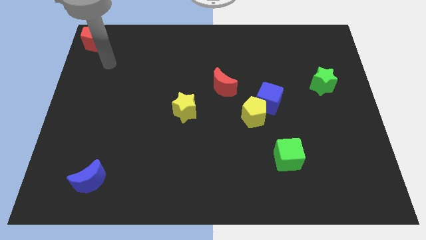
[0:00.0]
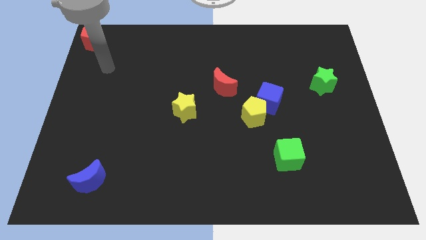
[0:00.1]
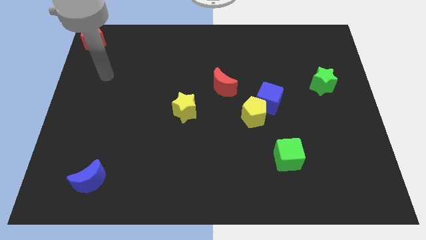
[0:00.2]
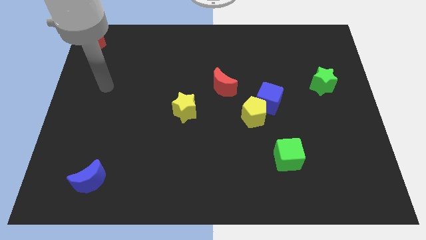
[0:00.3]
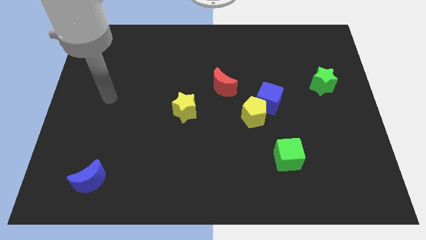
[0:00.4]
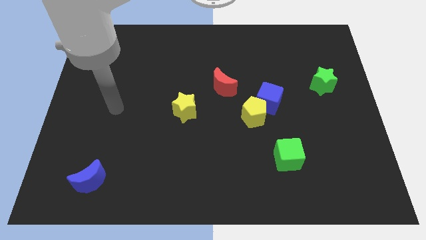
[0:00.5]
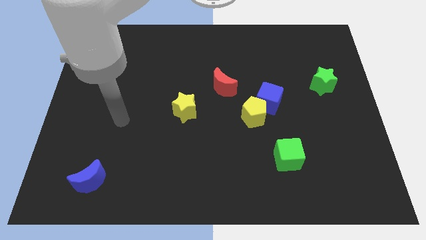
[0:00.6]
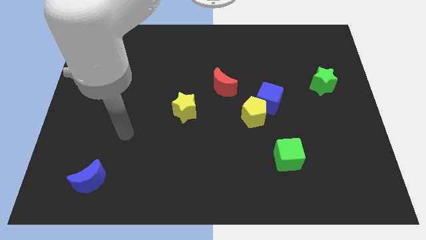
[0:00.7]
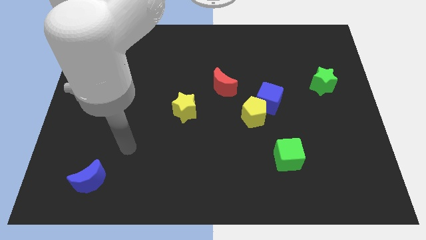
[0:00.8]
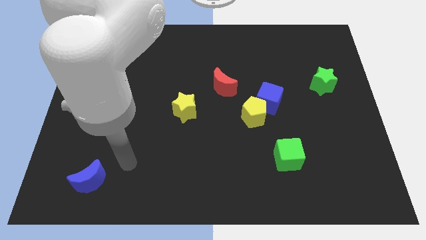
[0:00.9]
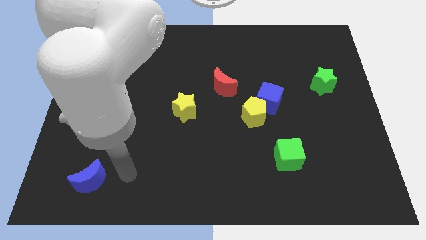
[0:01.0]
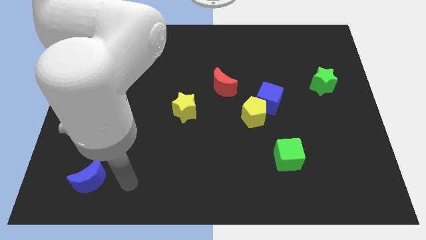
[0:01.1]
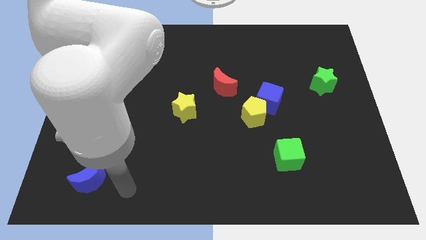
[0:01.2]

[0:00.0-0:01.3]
point your arm at the right of the blue crescent

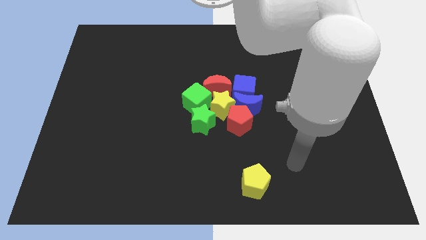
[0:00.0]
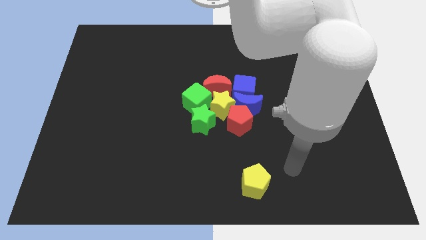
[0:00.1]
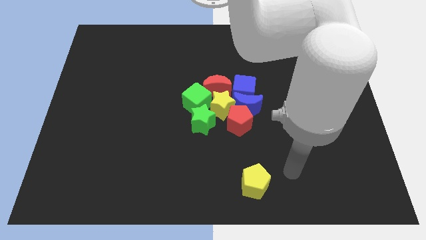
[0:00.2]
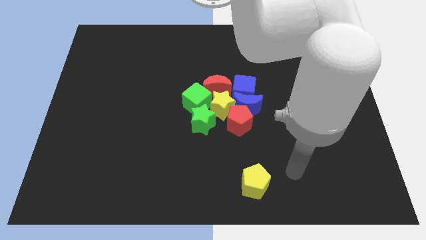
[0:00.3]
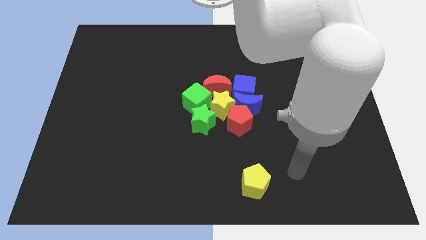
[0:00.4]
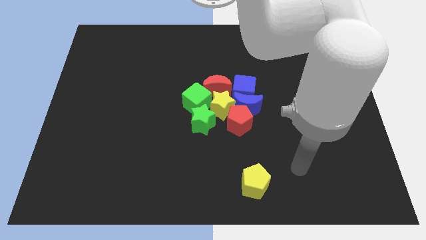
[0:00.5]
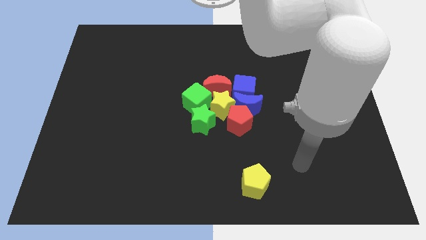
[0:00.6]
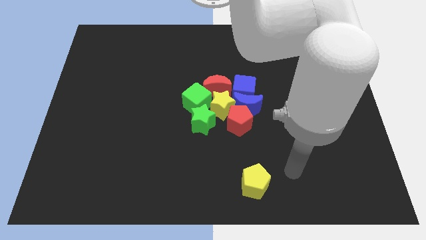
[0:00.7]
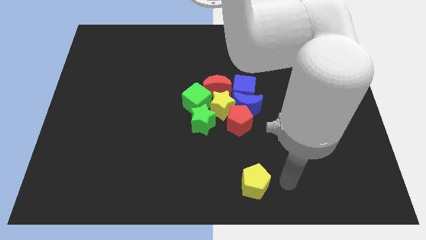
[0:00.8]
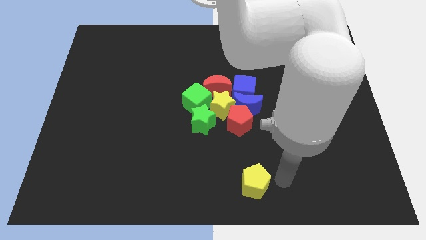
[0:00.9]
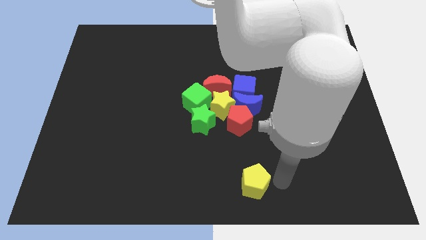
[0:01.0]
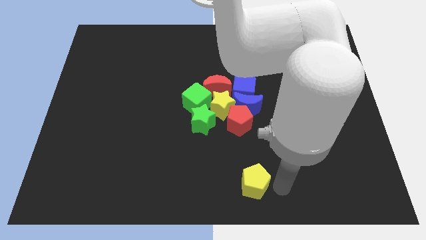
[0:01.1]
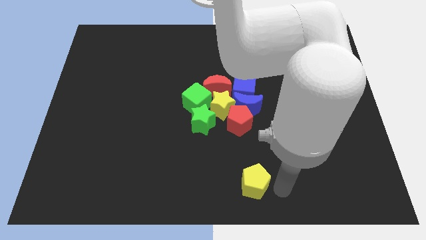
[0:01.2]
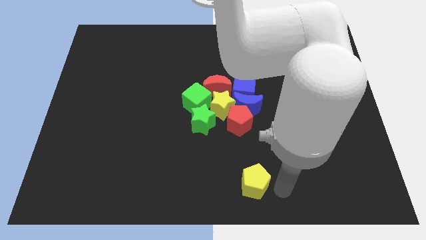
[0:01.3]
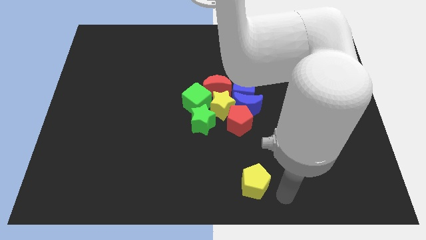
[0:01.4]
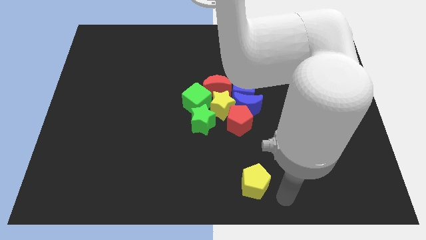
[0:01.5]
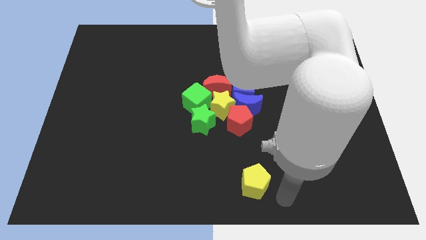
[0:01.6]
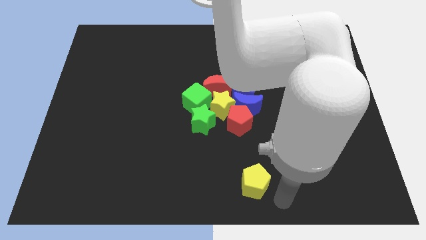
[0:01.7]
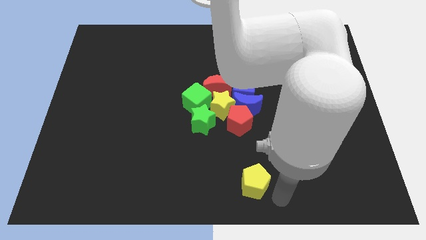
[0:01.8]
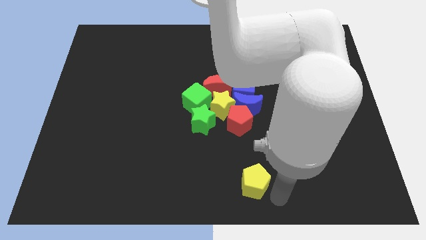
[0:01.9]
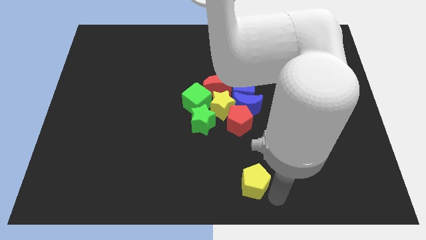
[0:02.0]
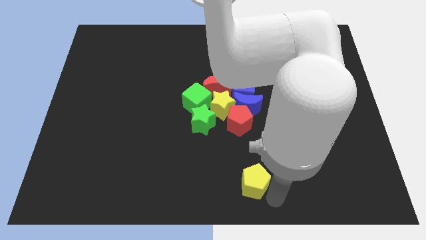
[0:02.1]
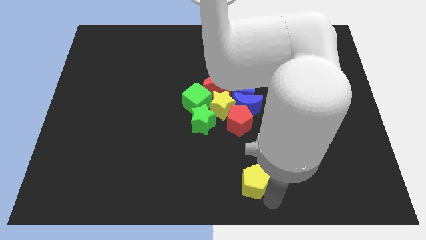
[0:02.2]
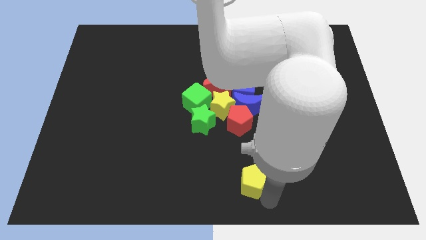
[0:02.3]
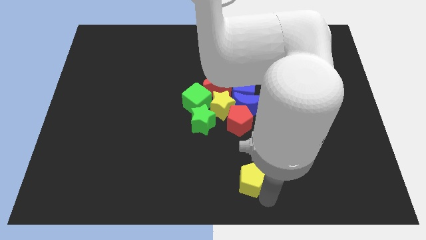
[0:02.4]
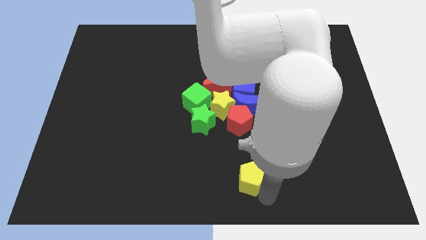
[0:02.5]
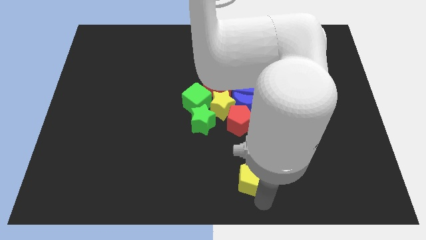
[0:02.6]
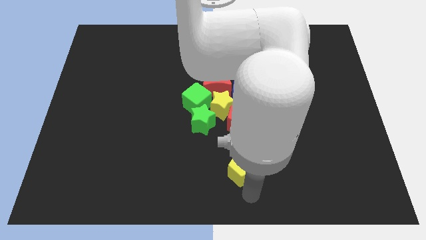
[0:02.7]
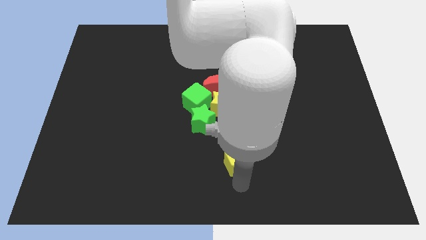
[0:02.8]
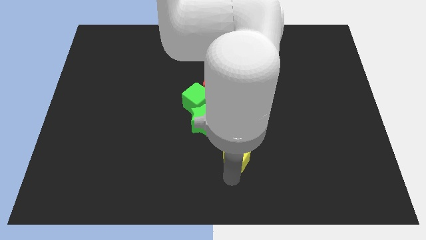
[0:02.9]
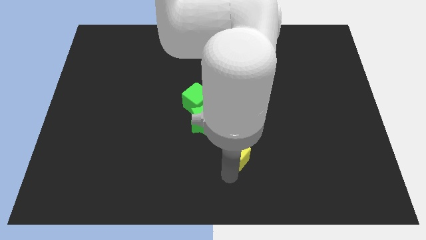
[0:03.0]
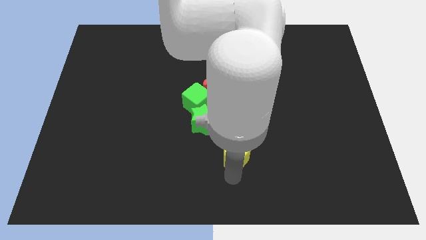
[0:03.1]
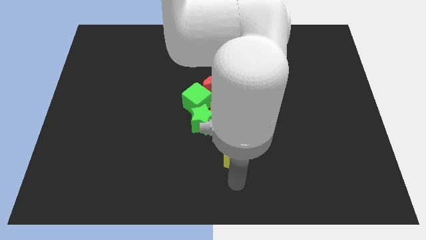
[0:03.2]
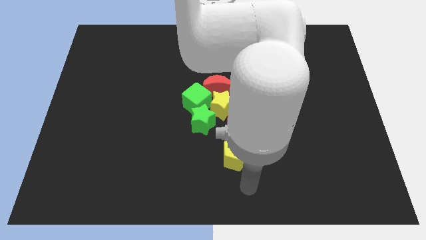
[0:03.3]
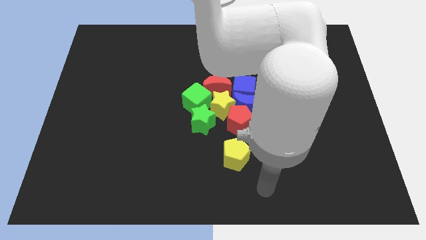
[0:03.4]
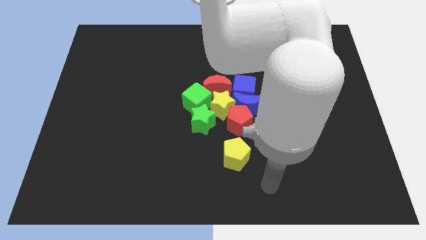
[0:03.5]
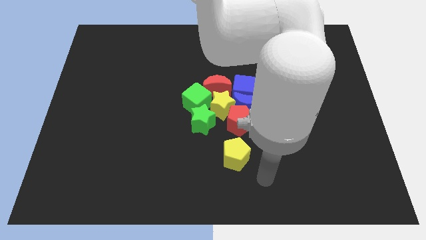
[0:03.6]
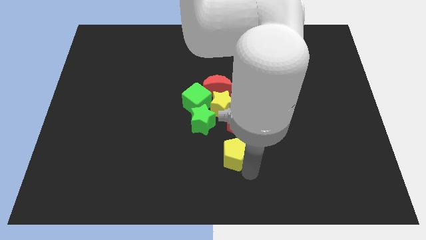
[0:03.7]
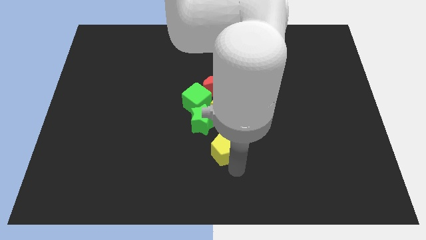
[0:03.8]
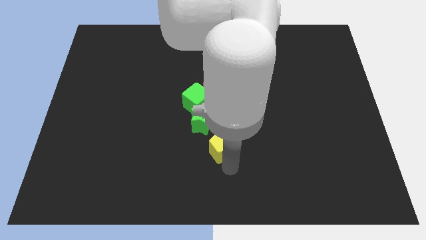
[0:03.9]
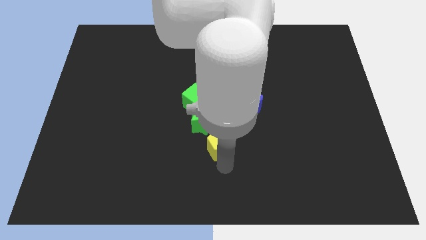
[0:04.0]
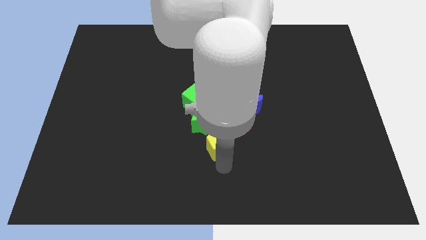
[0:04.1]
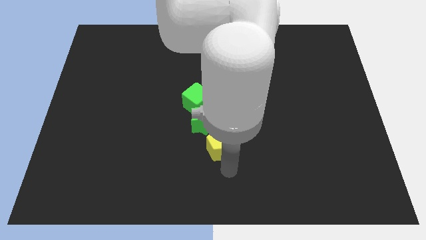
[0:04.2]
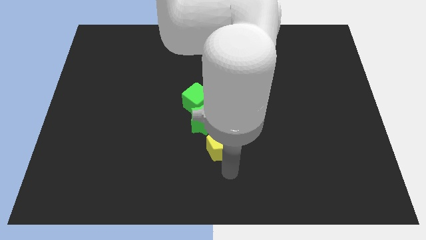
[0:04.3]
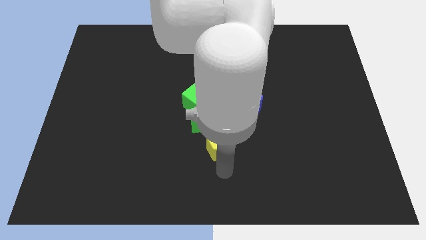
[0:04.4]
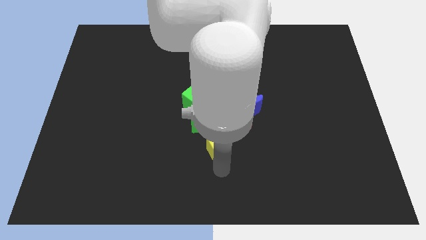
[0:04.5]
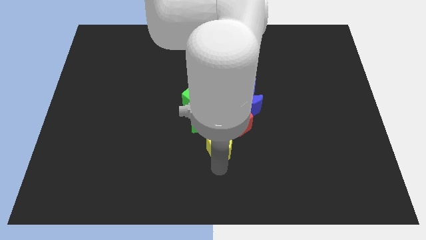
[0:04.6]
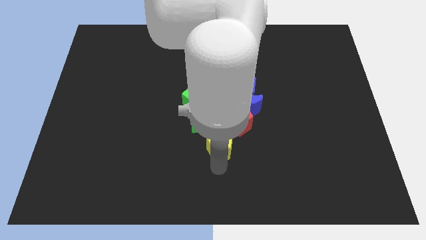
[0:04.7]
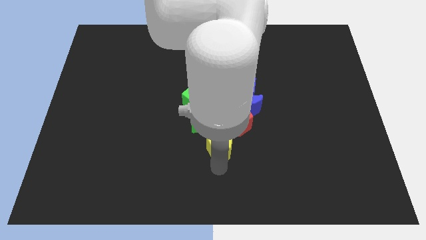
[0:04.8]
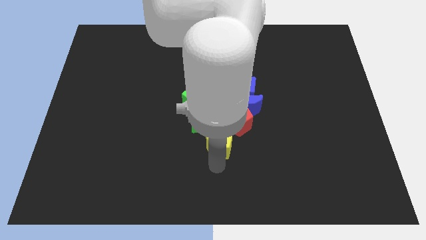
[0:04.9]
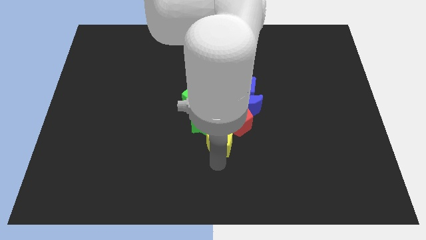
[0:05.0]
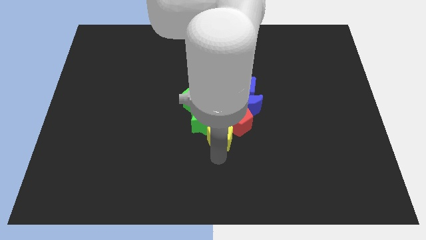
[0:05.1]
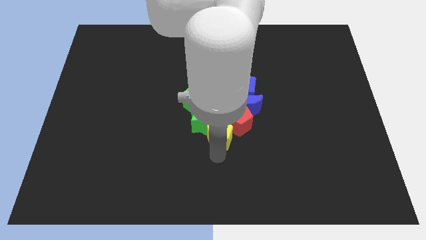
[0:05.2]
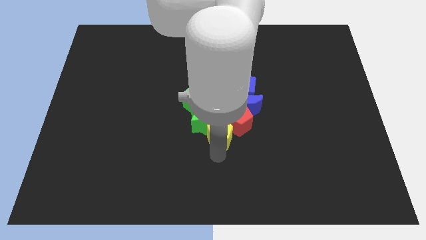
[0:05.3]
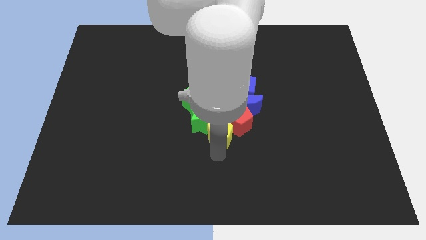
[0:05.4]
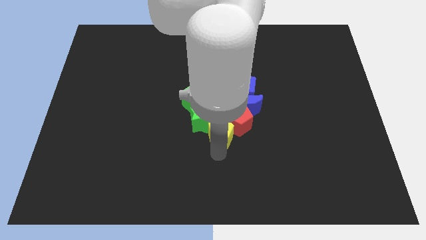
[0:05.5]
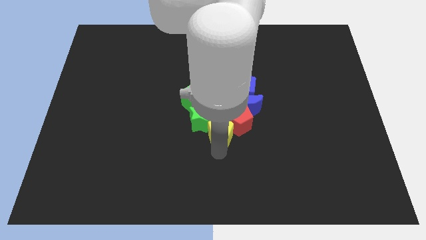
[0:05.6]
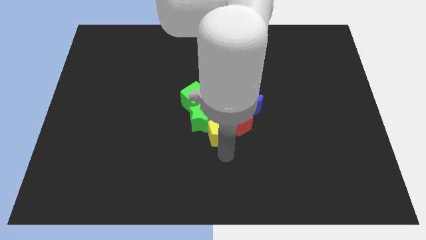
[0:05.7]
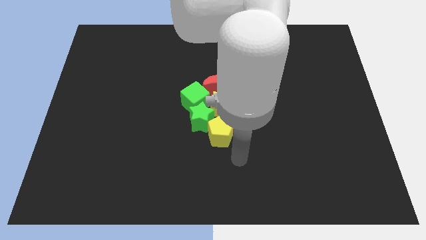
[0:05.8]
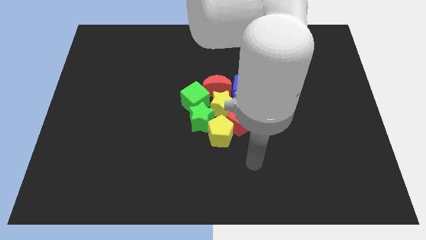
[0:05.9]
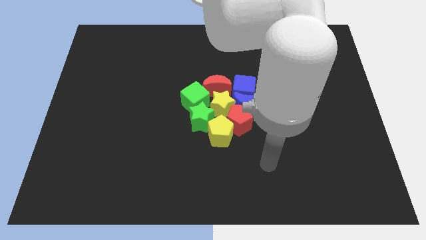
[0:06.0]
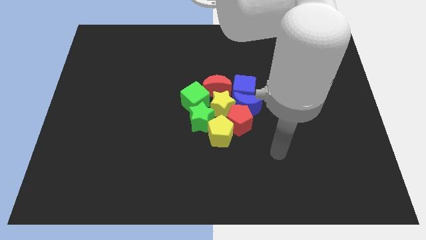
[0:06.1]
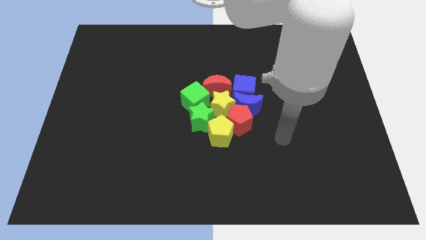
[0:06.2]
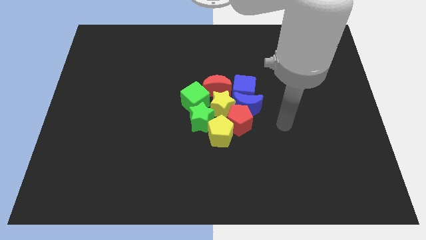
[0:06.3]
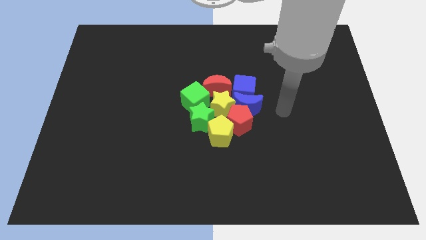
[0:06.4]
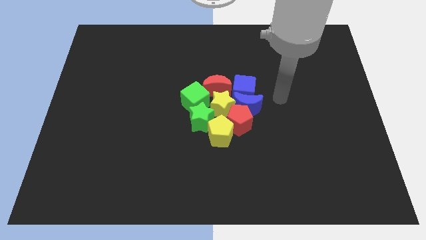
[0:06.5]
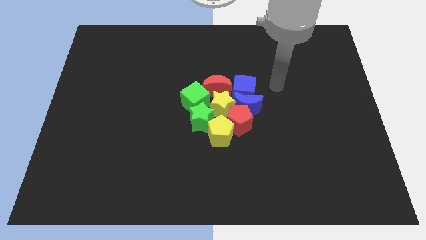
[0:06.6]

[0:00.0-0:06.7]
move the yellow pentagon into the group of blocks

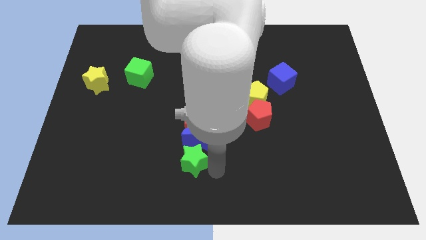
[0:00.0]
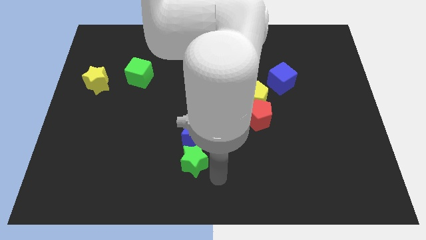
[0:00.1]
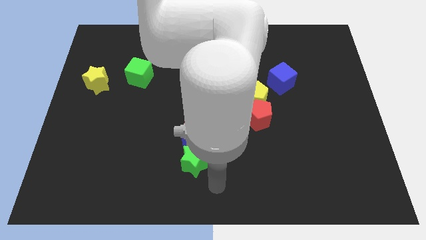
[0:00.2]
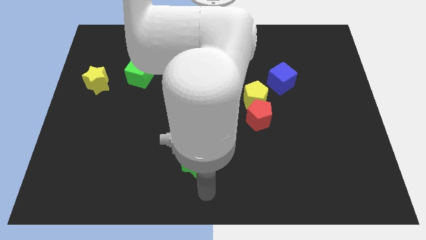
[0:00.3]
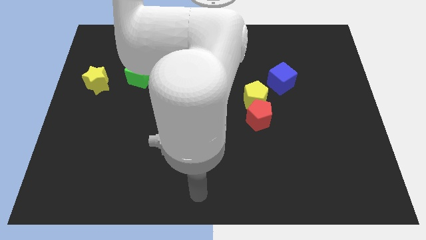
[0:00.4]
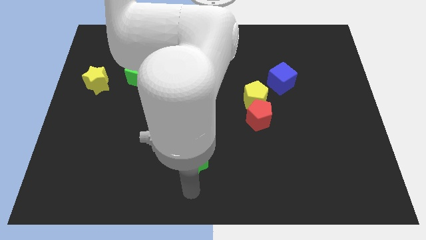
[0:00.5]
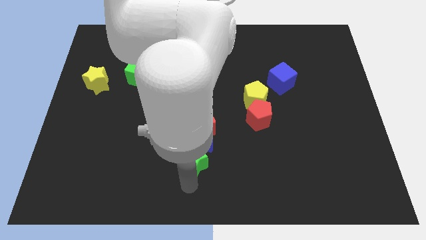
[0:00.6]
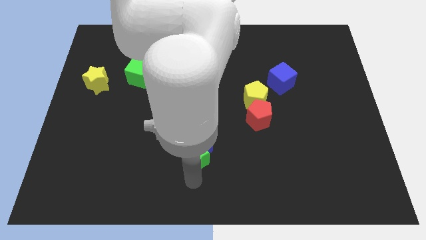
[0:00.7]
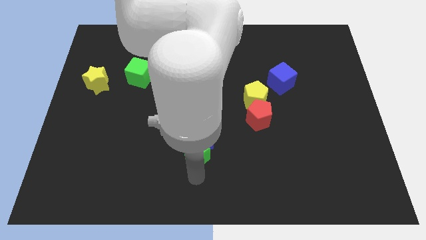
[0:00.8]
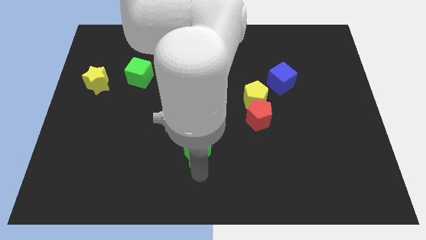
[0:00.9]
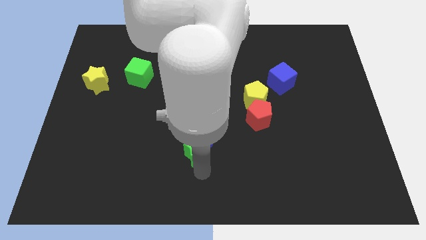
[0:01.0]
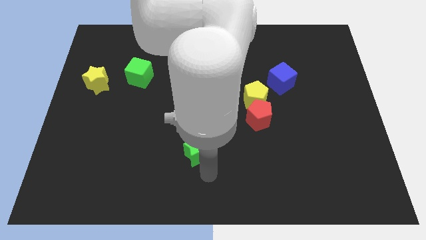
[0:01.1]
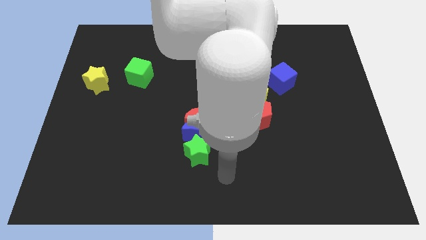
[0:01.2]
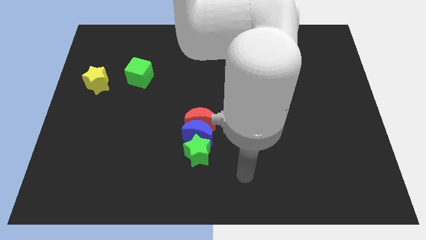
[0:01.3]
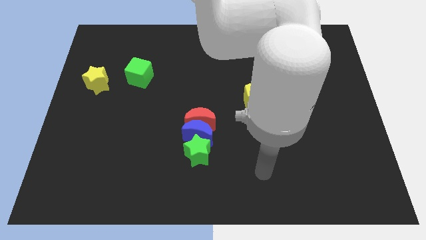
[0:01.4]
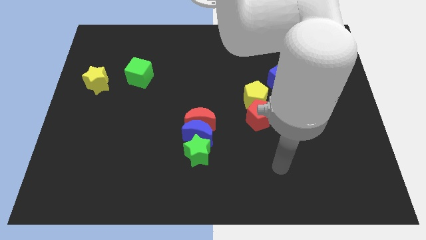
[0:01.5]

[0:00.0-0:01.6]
push the green star into the blue crescent
